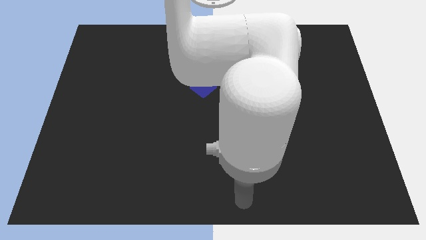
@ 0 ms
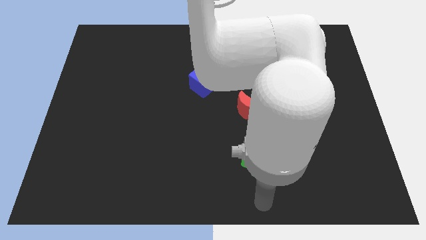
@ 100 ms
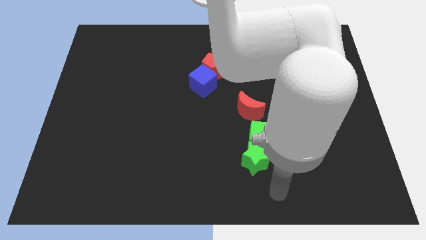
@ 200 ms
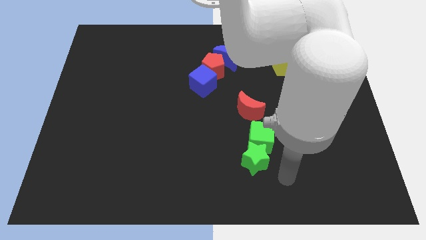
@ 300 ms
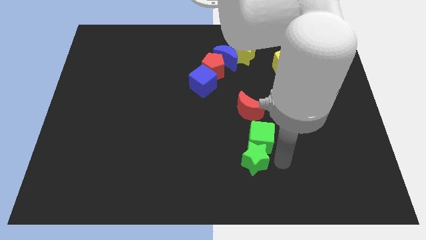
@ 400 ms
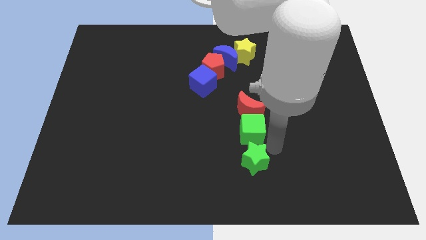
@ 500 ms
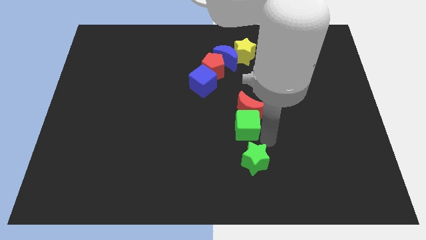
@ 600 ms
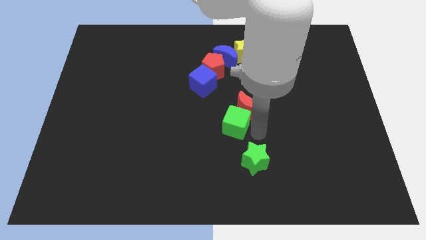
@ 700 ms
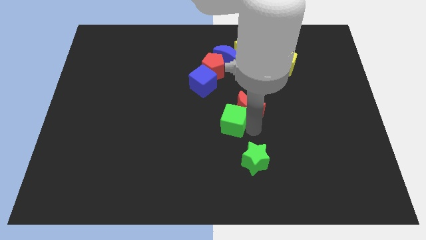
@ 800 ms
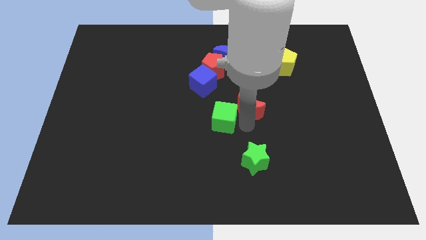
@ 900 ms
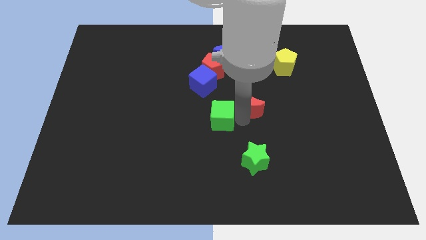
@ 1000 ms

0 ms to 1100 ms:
place your hand in between red moon and green cube

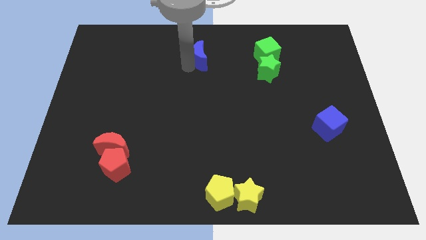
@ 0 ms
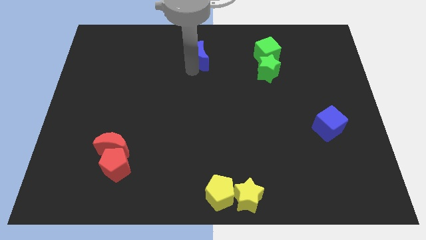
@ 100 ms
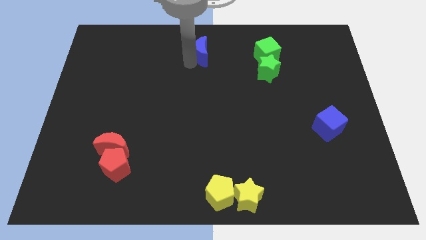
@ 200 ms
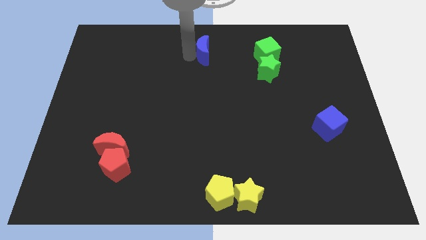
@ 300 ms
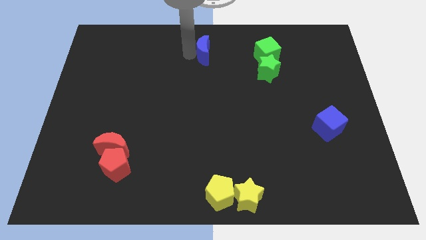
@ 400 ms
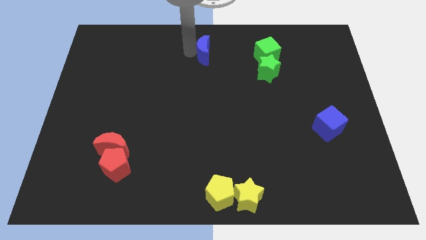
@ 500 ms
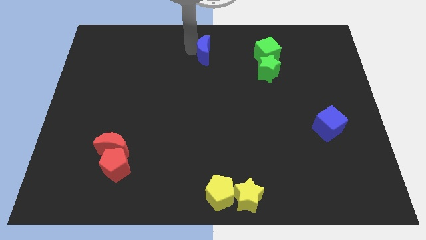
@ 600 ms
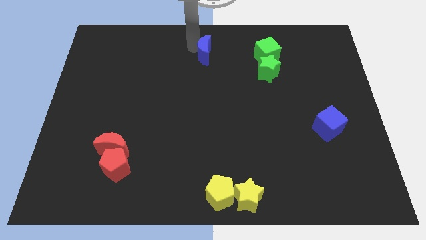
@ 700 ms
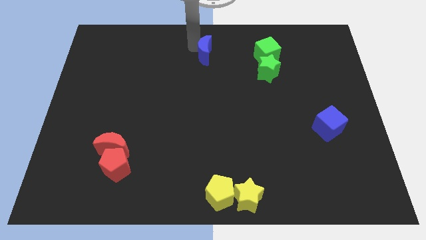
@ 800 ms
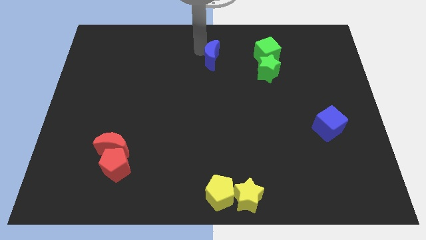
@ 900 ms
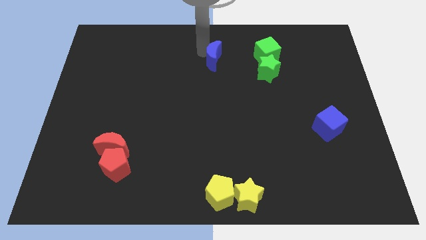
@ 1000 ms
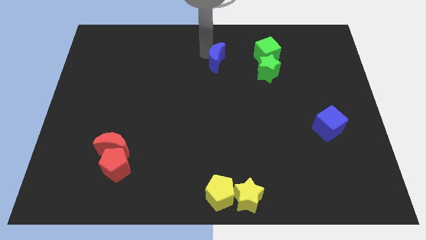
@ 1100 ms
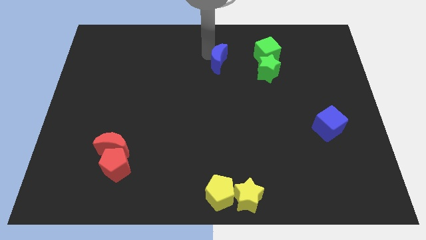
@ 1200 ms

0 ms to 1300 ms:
move the blue moon slightly to the right side

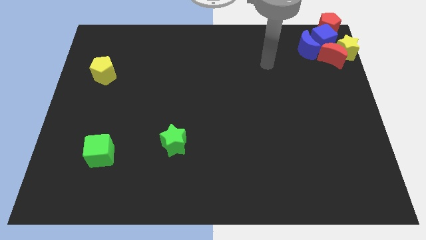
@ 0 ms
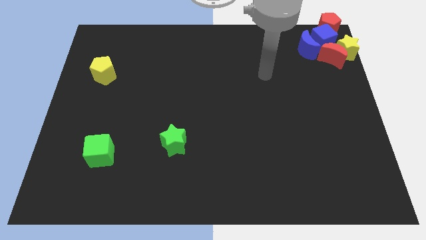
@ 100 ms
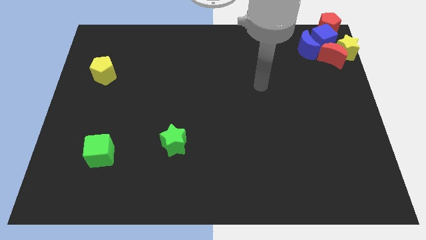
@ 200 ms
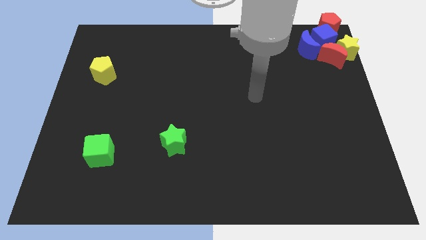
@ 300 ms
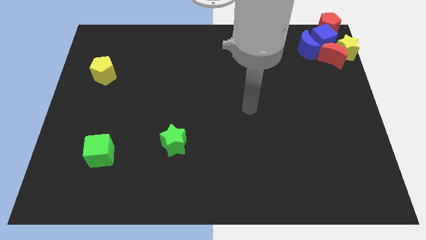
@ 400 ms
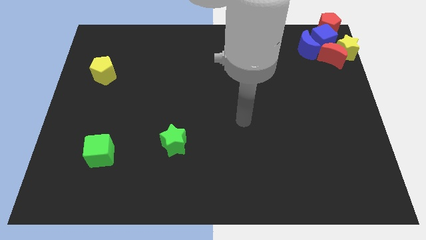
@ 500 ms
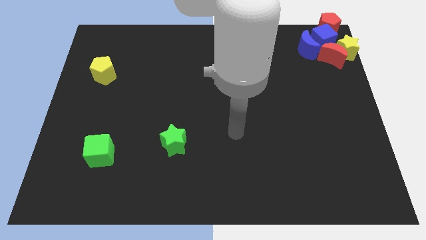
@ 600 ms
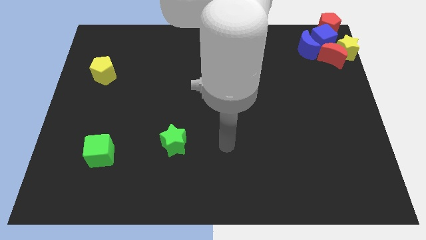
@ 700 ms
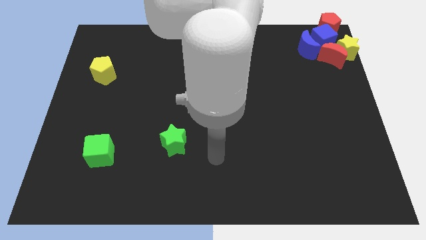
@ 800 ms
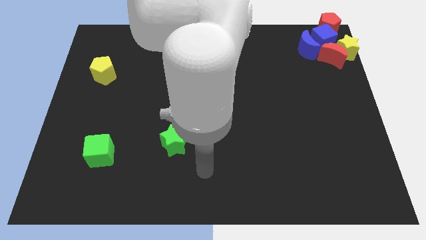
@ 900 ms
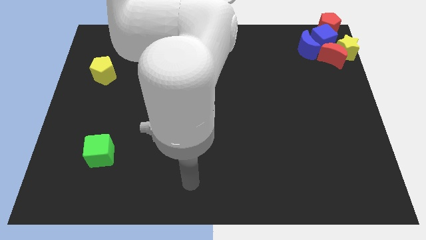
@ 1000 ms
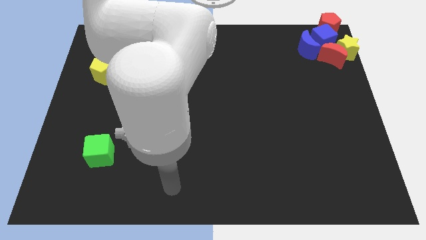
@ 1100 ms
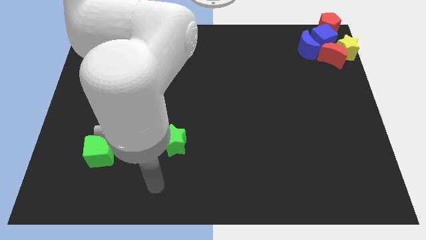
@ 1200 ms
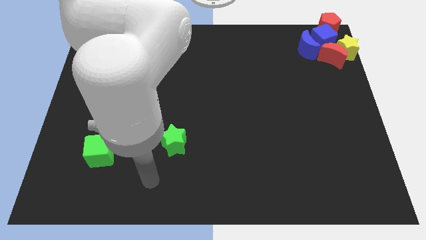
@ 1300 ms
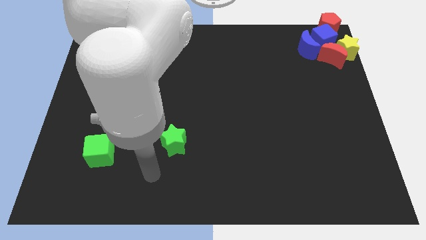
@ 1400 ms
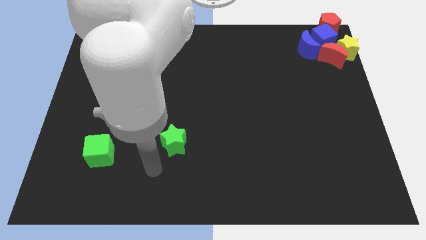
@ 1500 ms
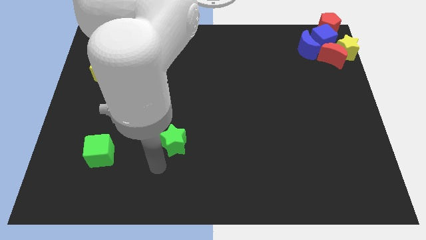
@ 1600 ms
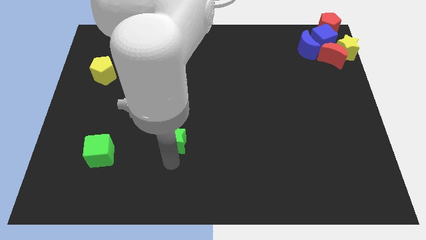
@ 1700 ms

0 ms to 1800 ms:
point your arm at the bottom of the green star

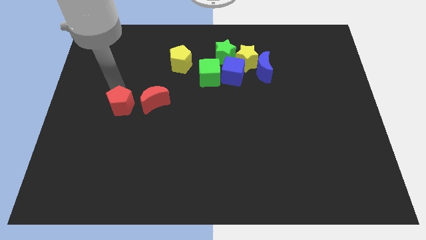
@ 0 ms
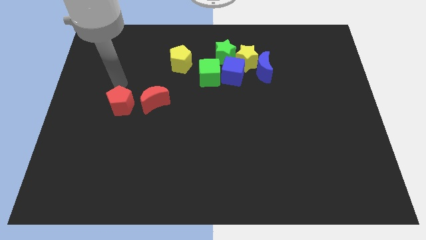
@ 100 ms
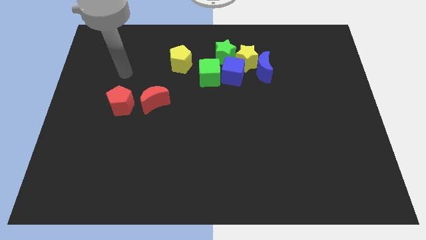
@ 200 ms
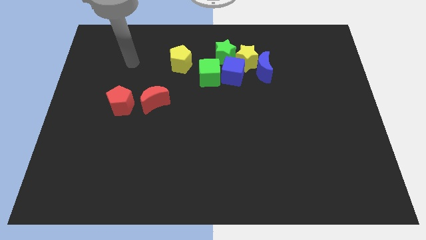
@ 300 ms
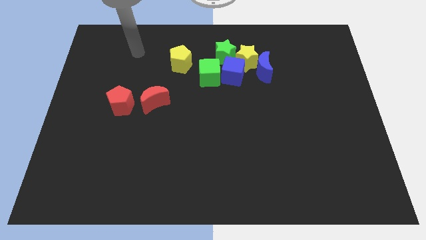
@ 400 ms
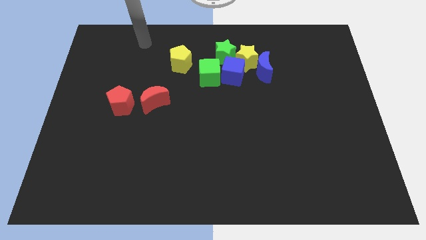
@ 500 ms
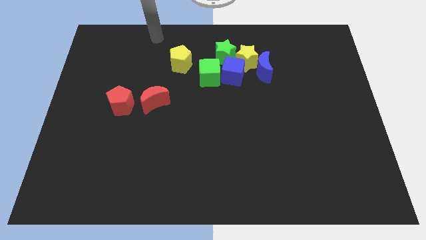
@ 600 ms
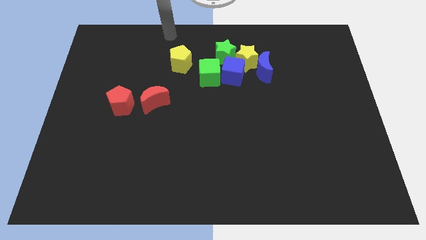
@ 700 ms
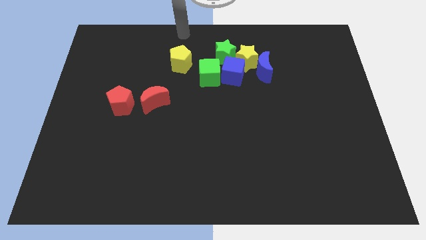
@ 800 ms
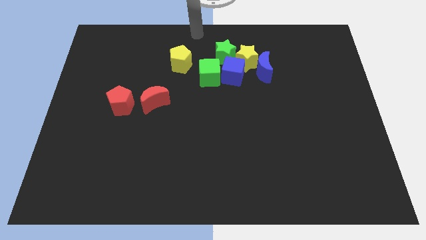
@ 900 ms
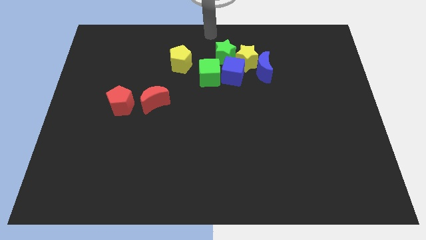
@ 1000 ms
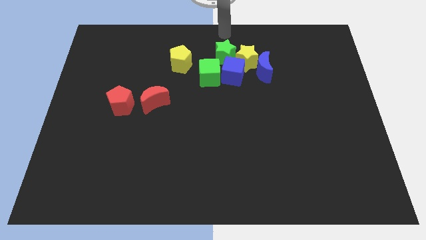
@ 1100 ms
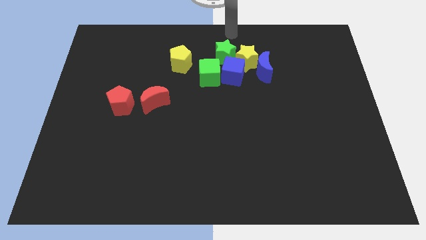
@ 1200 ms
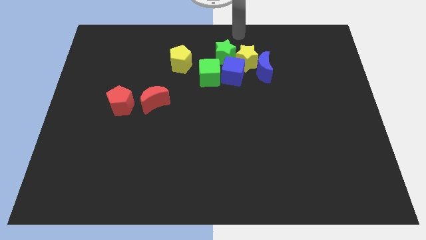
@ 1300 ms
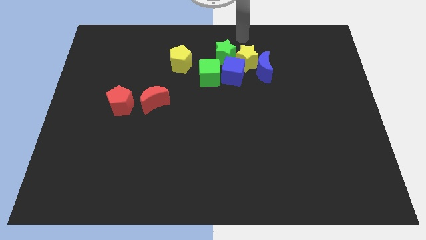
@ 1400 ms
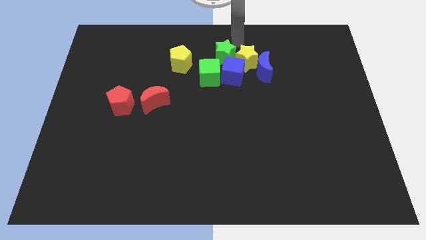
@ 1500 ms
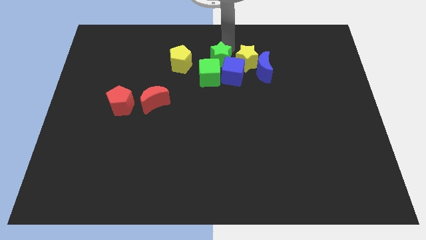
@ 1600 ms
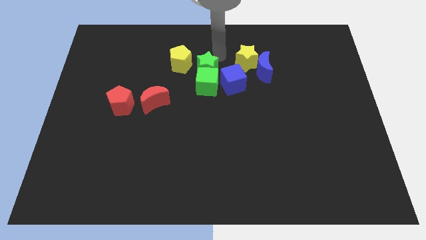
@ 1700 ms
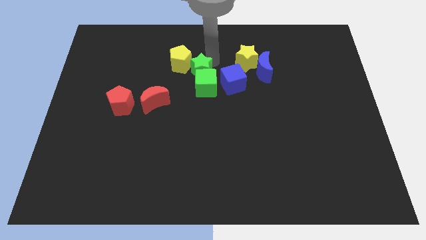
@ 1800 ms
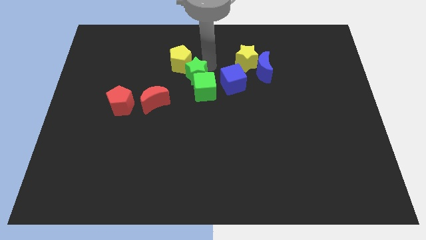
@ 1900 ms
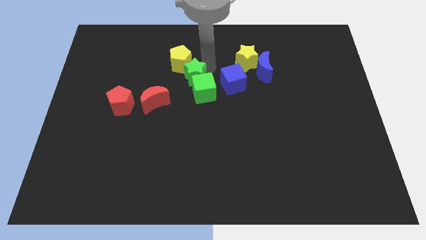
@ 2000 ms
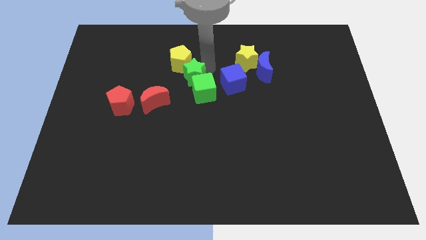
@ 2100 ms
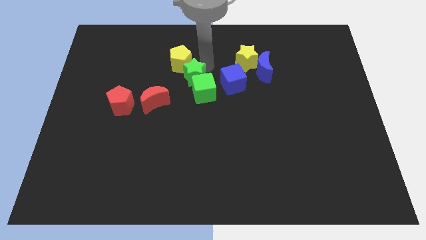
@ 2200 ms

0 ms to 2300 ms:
move the green blocks towards the bottom right of the yellow pentagon

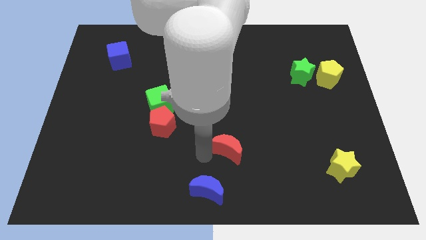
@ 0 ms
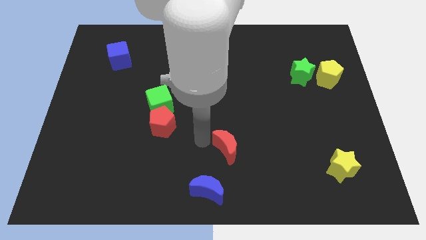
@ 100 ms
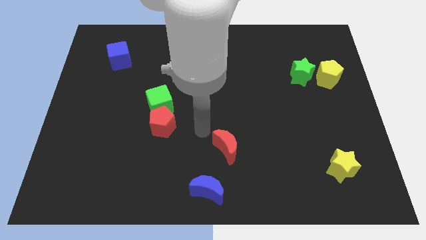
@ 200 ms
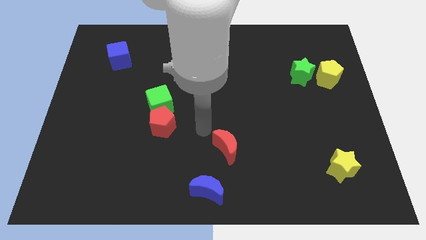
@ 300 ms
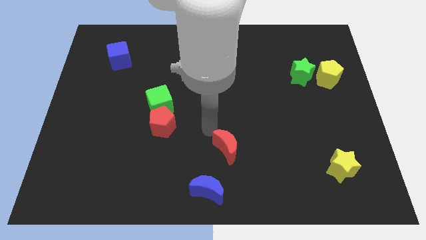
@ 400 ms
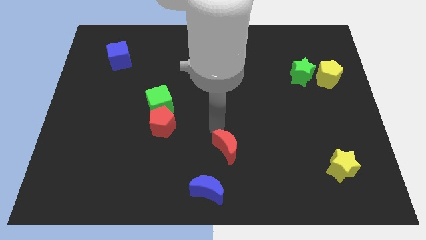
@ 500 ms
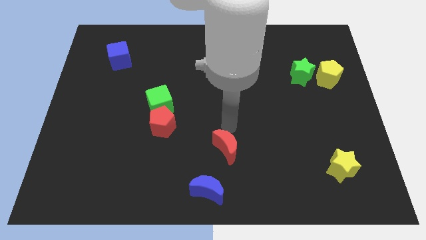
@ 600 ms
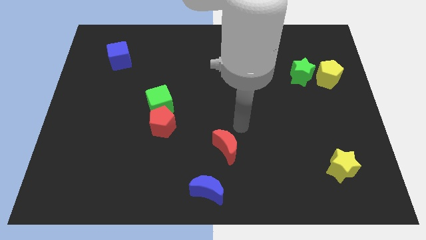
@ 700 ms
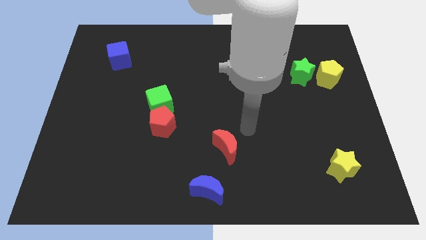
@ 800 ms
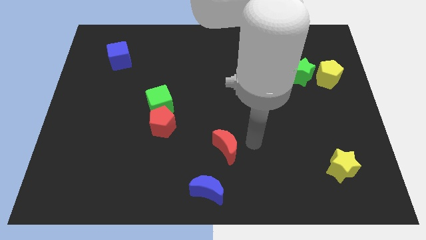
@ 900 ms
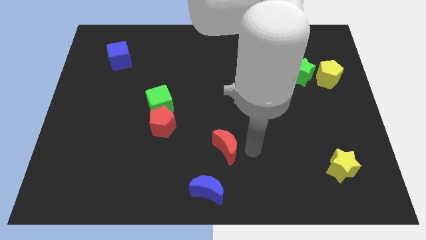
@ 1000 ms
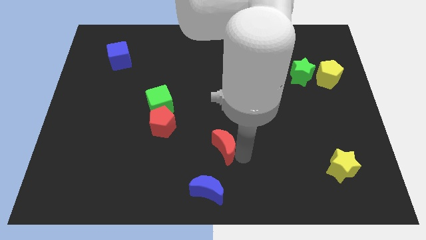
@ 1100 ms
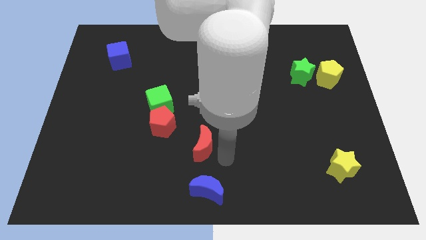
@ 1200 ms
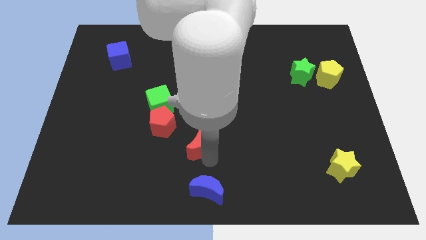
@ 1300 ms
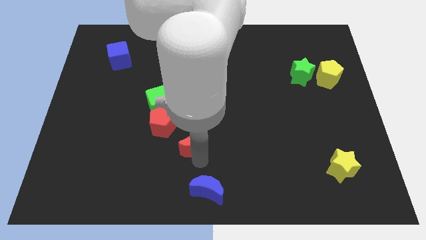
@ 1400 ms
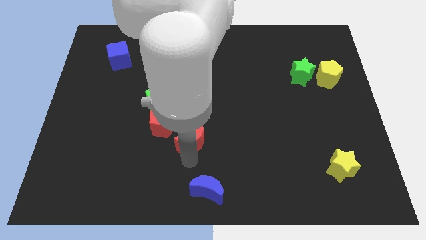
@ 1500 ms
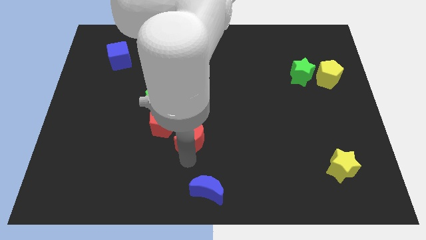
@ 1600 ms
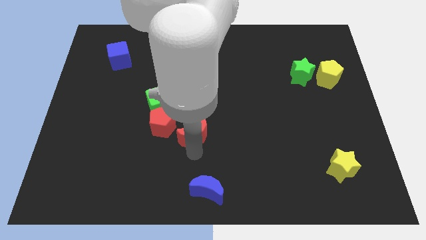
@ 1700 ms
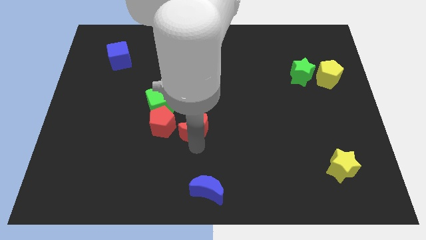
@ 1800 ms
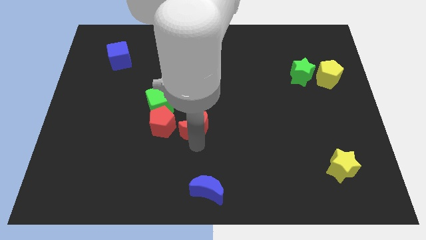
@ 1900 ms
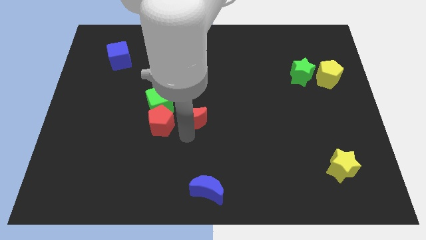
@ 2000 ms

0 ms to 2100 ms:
bring the red crescent at the right side of the red pentagon

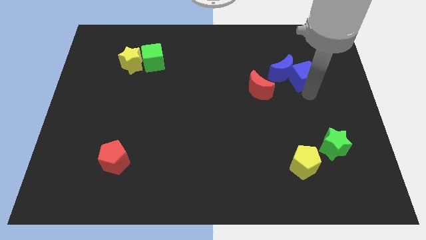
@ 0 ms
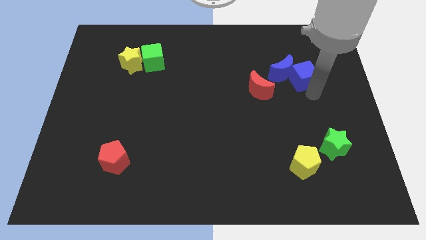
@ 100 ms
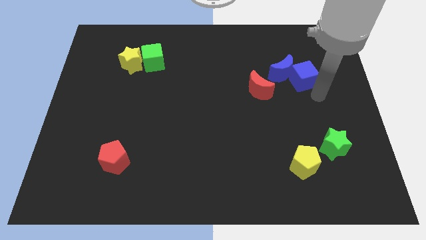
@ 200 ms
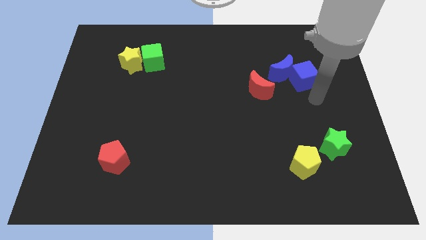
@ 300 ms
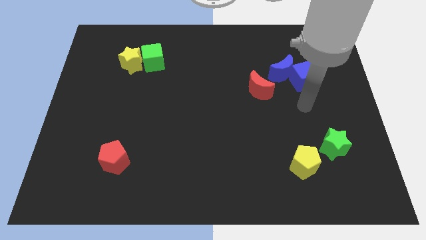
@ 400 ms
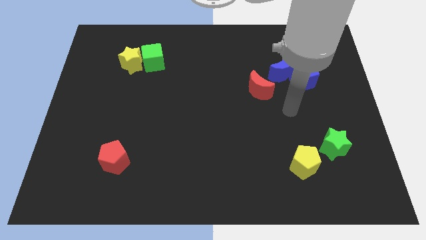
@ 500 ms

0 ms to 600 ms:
place your arm in between blue moon and yellow pentagon
